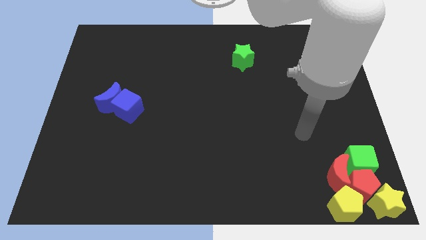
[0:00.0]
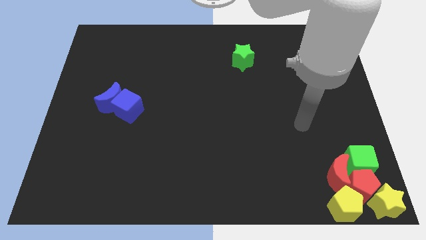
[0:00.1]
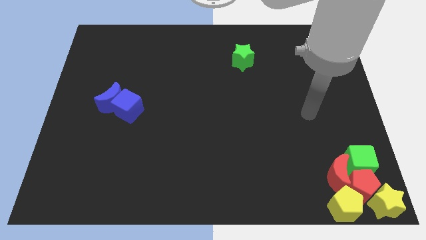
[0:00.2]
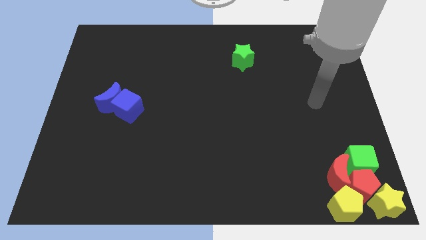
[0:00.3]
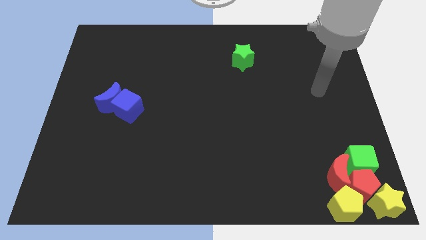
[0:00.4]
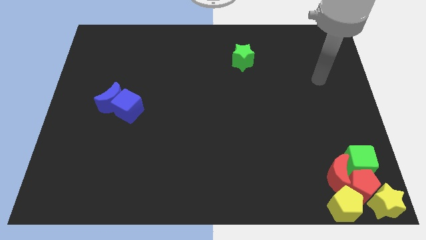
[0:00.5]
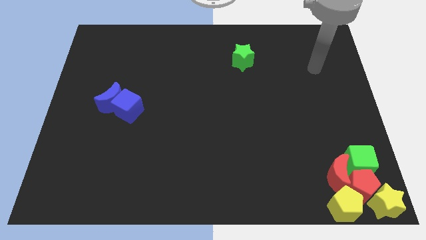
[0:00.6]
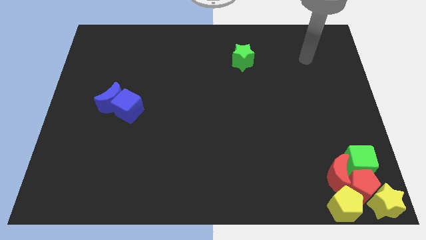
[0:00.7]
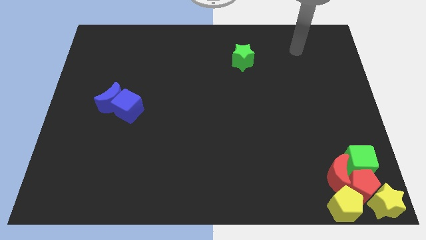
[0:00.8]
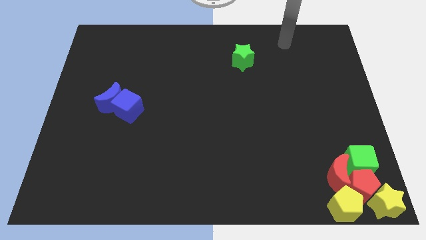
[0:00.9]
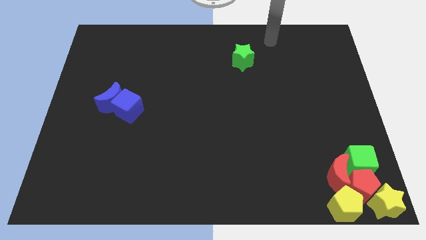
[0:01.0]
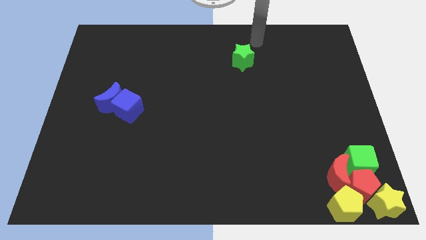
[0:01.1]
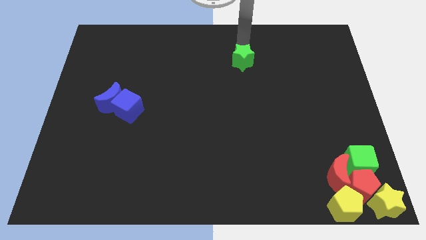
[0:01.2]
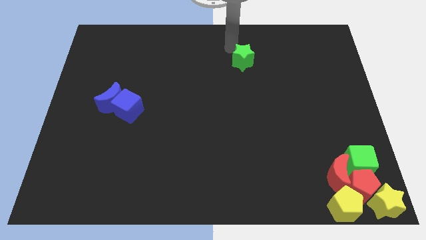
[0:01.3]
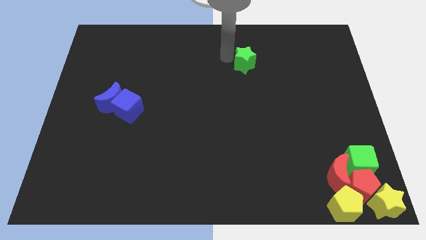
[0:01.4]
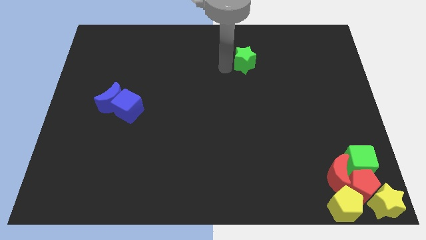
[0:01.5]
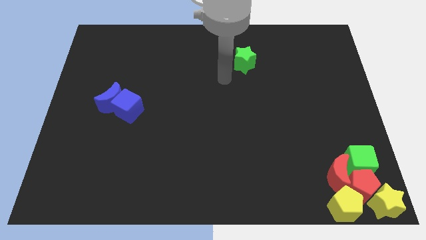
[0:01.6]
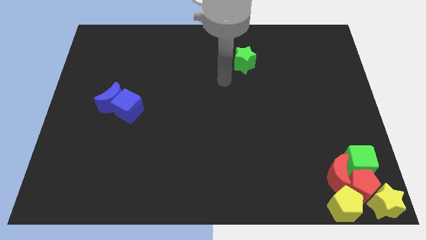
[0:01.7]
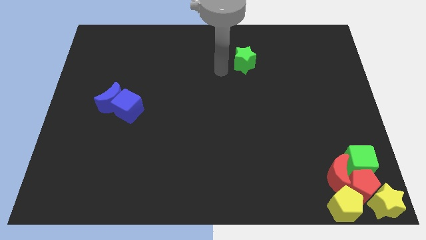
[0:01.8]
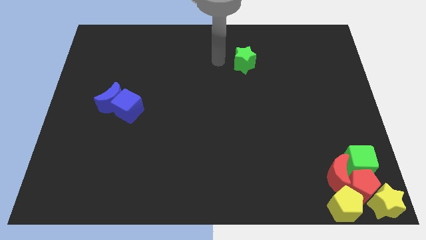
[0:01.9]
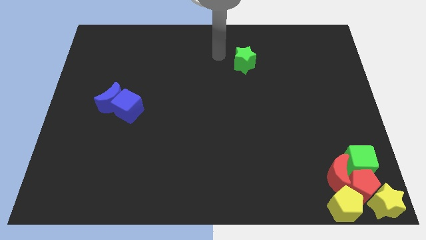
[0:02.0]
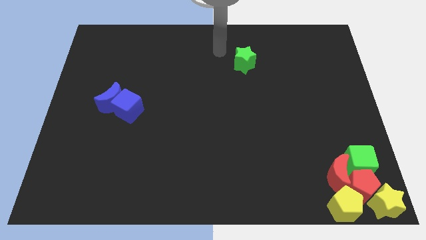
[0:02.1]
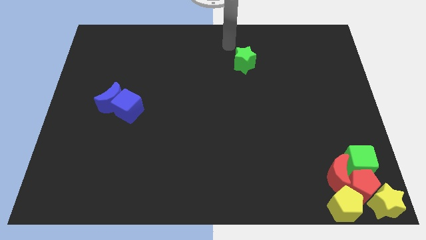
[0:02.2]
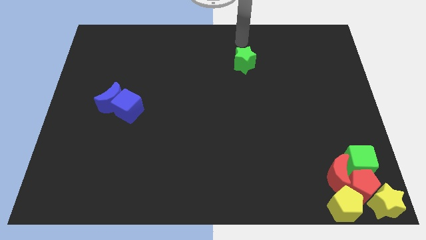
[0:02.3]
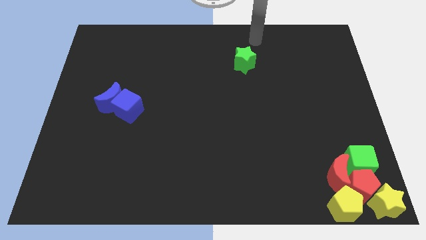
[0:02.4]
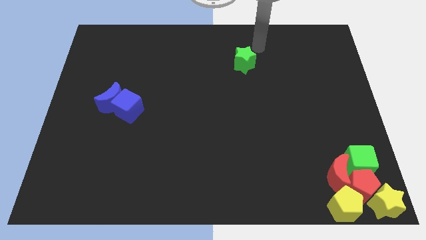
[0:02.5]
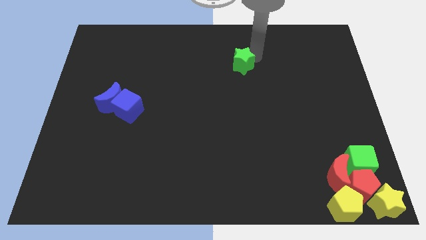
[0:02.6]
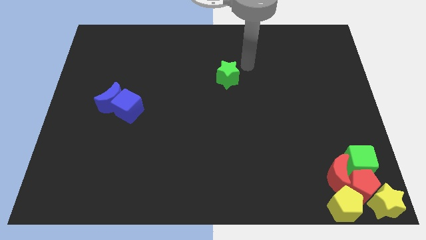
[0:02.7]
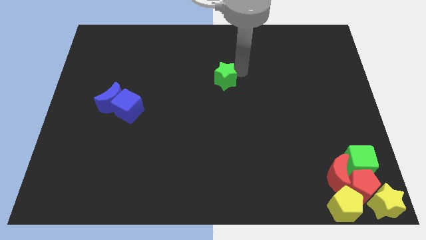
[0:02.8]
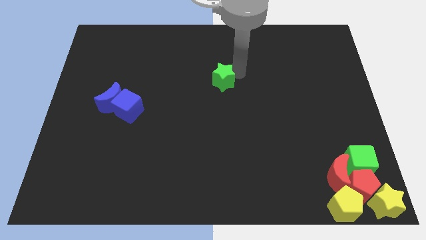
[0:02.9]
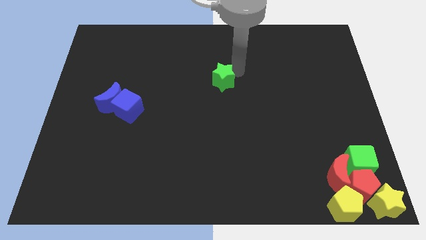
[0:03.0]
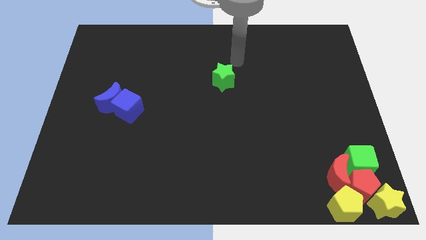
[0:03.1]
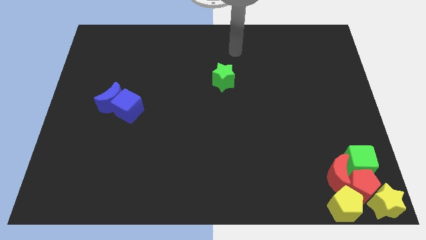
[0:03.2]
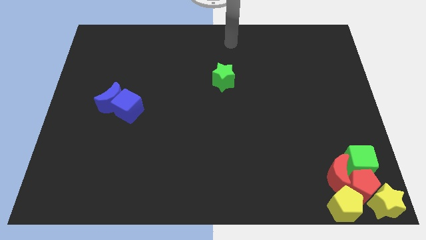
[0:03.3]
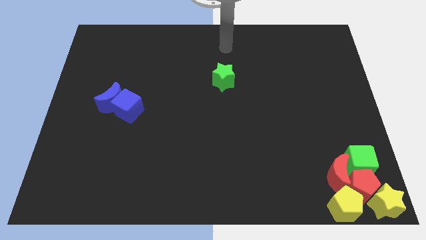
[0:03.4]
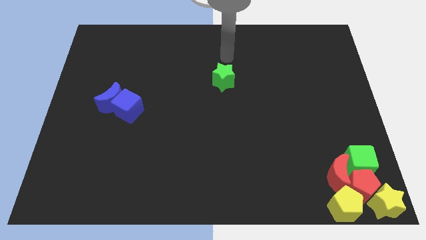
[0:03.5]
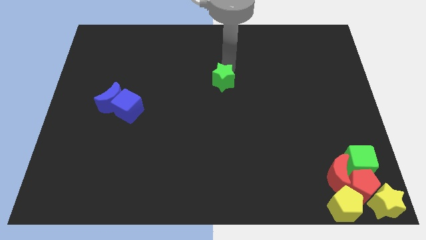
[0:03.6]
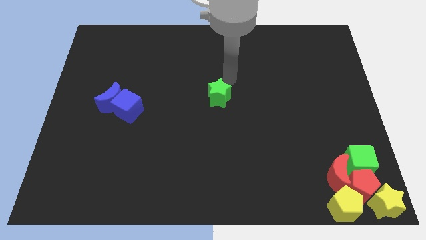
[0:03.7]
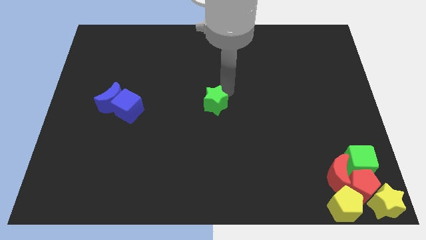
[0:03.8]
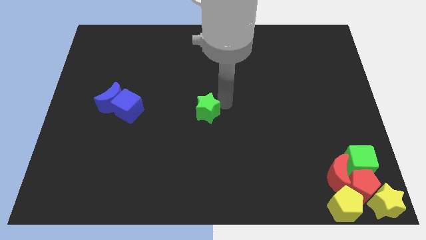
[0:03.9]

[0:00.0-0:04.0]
slide the green star to the center of the board

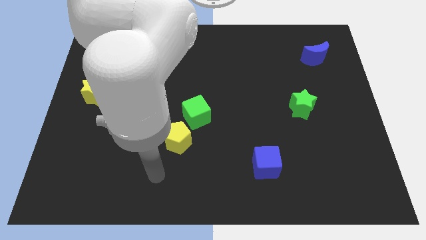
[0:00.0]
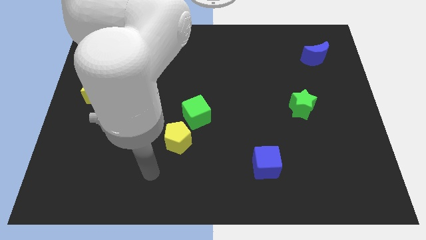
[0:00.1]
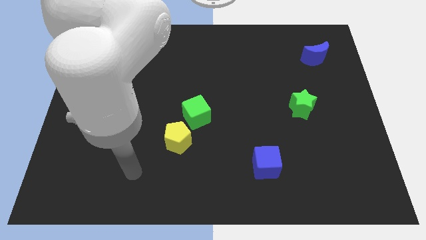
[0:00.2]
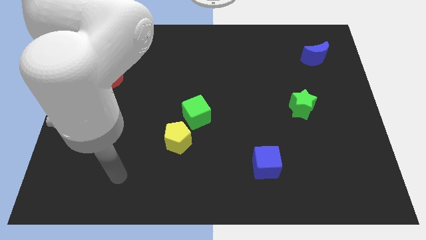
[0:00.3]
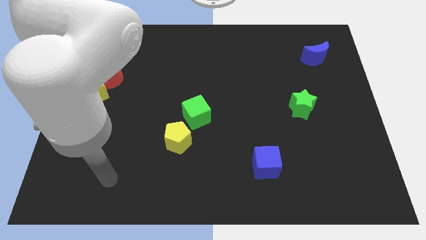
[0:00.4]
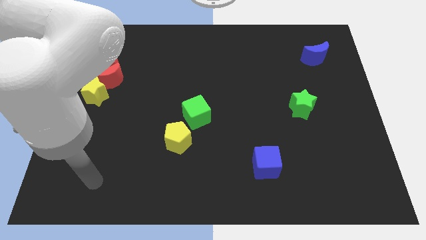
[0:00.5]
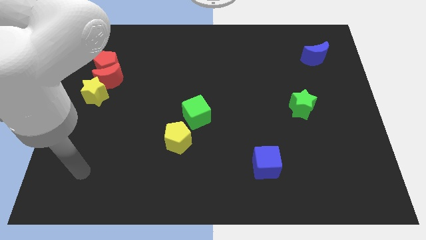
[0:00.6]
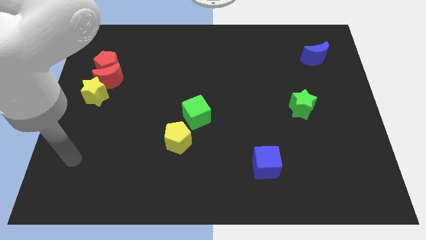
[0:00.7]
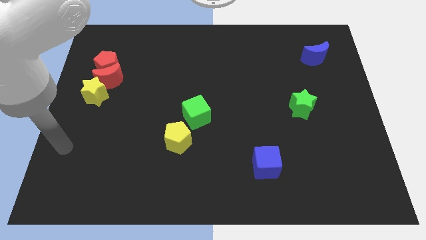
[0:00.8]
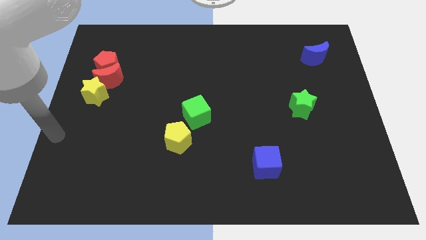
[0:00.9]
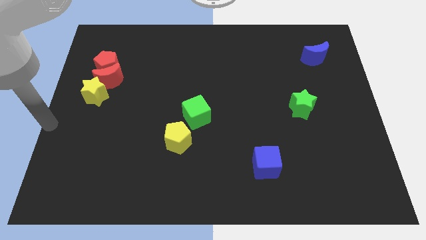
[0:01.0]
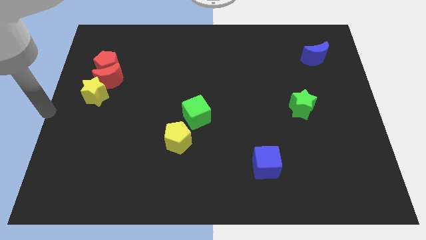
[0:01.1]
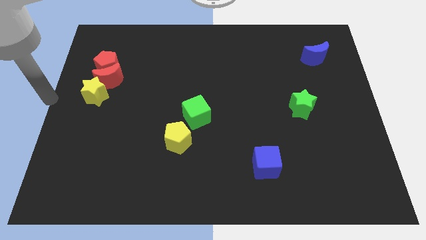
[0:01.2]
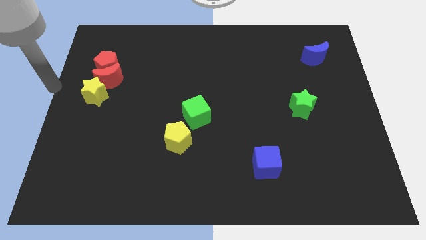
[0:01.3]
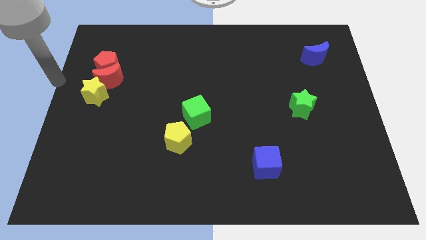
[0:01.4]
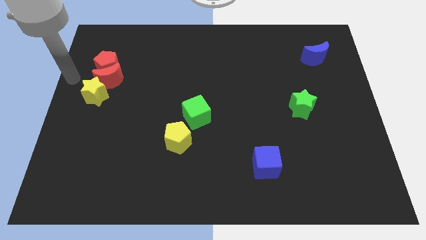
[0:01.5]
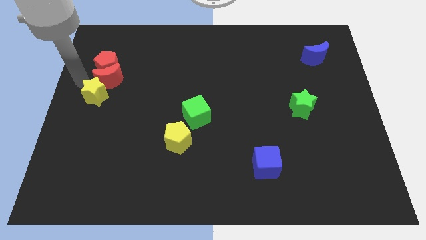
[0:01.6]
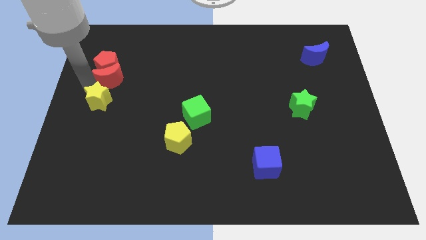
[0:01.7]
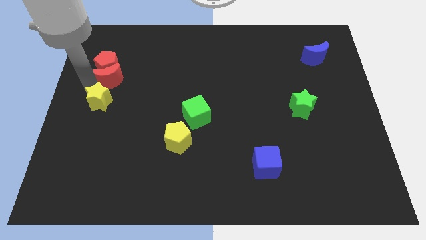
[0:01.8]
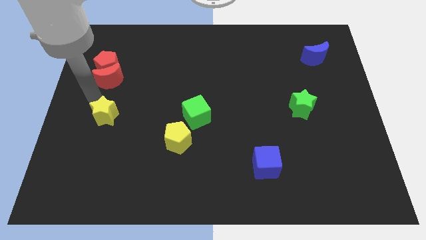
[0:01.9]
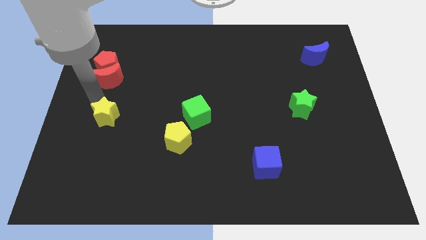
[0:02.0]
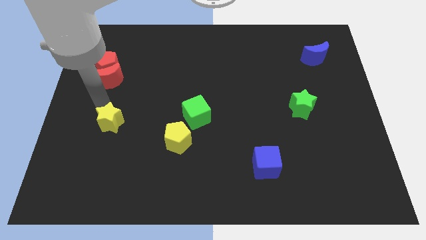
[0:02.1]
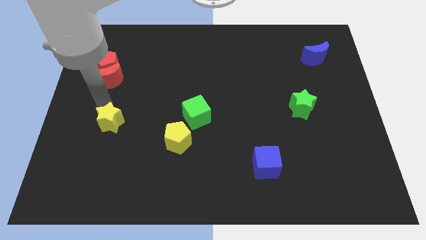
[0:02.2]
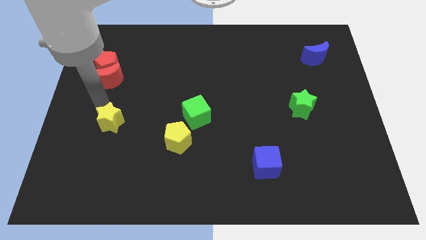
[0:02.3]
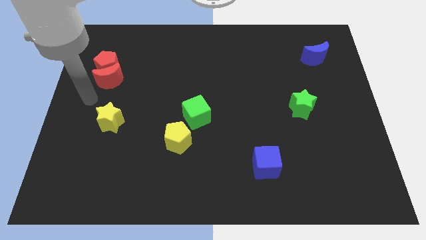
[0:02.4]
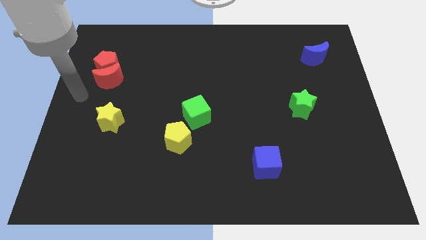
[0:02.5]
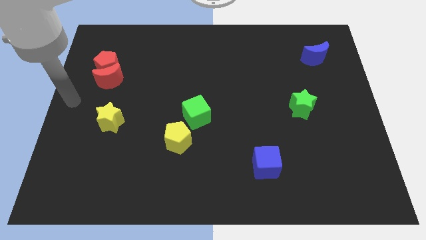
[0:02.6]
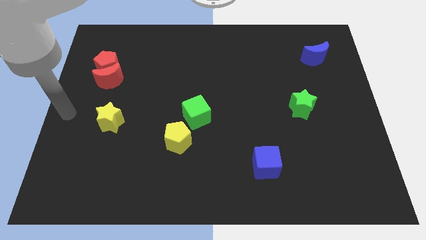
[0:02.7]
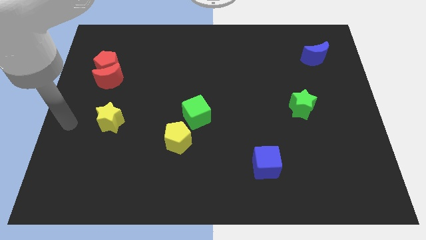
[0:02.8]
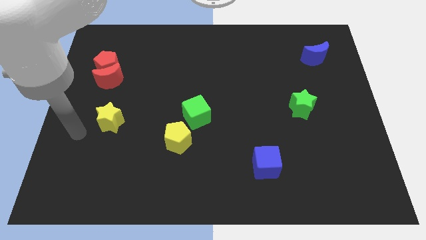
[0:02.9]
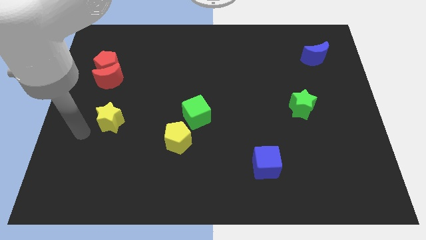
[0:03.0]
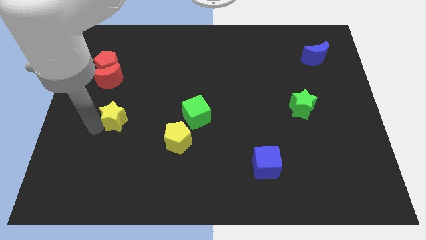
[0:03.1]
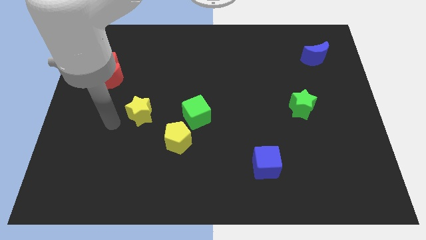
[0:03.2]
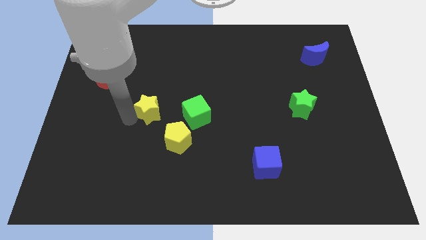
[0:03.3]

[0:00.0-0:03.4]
move the yellow star away from the bottom side of the red crescent

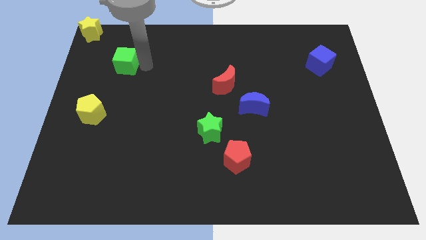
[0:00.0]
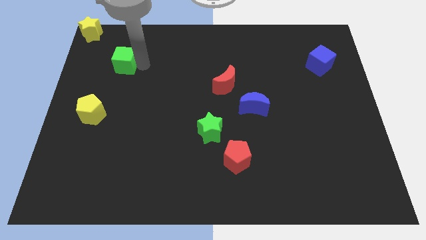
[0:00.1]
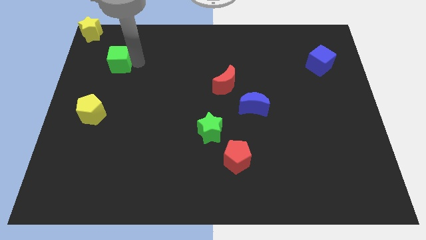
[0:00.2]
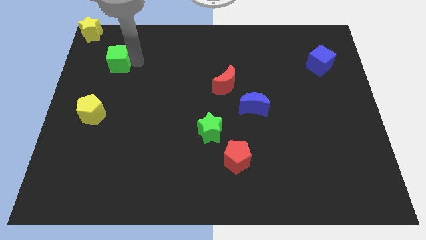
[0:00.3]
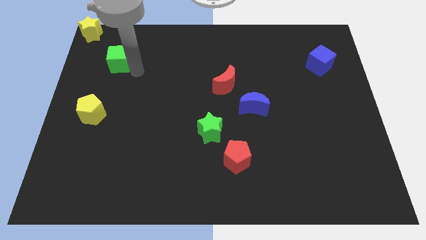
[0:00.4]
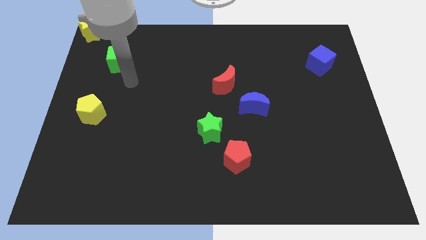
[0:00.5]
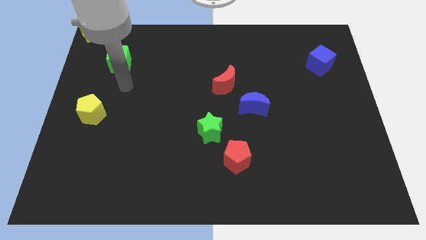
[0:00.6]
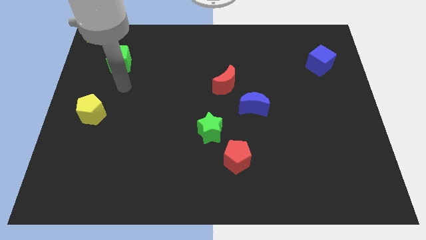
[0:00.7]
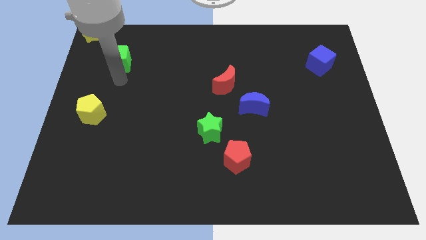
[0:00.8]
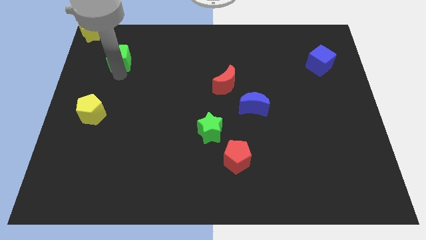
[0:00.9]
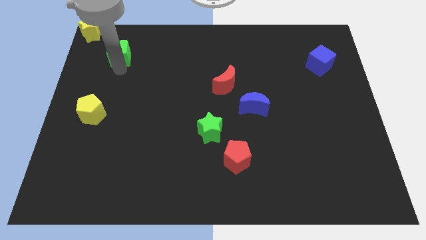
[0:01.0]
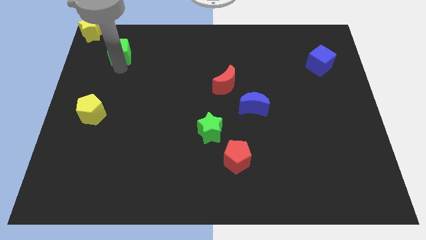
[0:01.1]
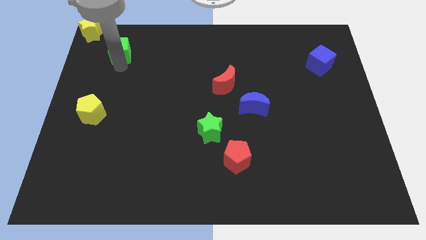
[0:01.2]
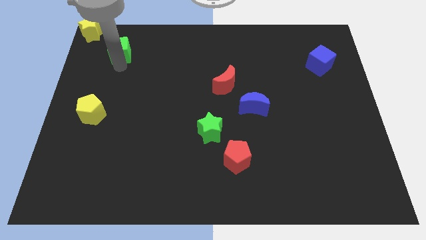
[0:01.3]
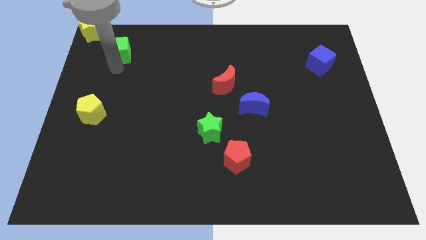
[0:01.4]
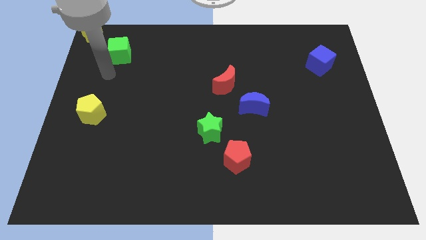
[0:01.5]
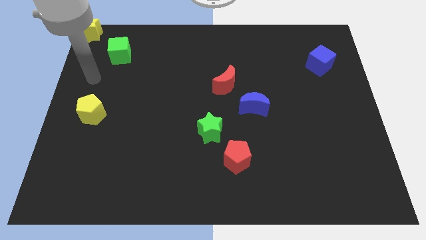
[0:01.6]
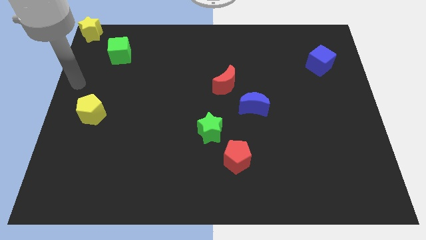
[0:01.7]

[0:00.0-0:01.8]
place green cube to the bottom right of yellow star
